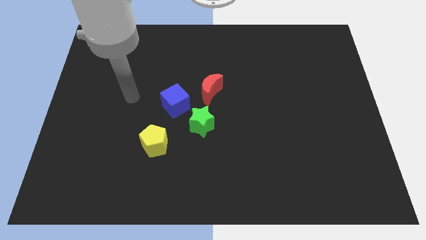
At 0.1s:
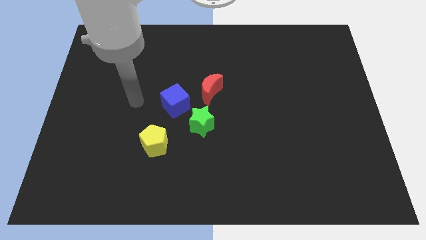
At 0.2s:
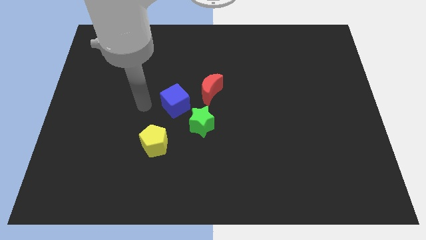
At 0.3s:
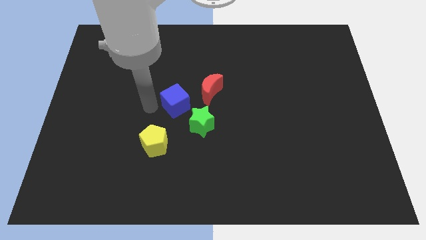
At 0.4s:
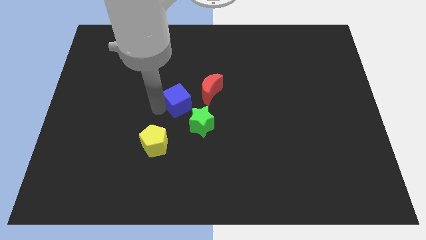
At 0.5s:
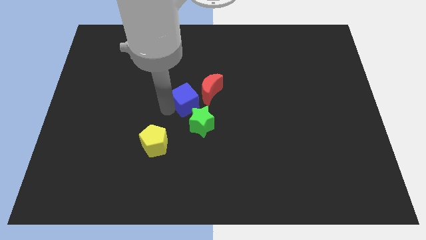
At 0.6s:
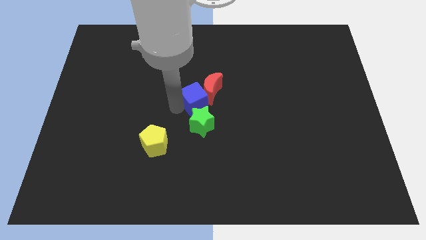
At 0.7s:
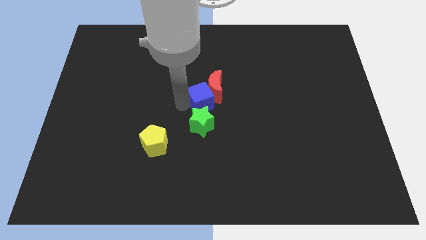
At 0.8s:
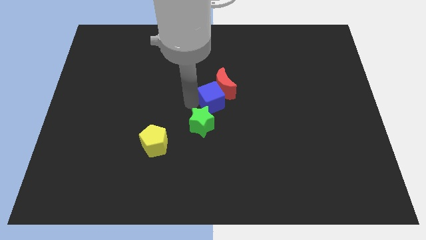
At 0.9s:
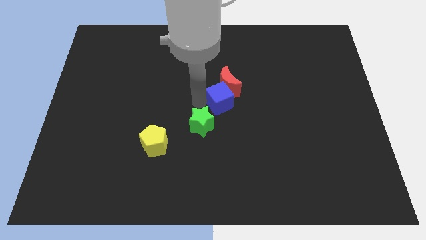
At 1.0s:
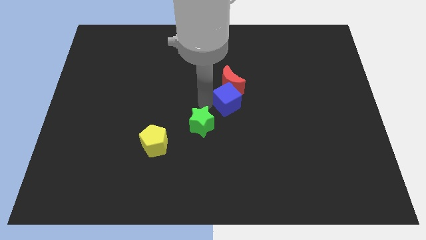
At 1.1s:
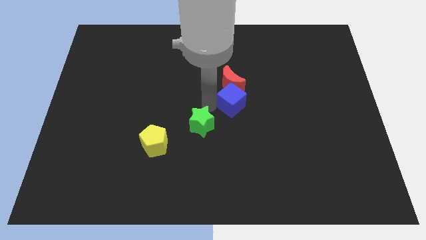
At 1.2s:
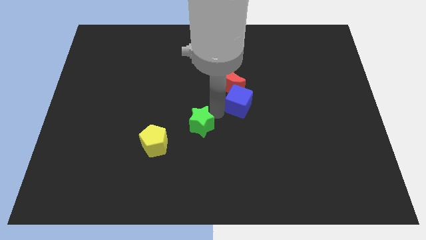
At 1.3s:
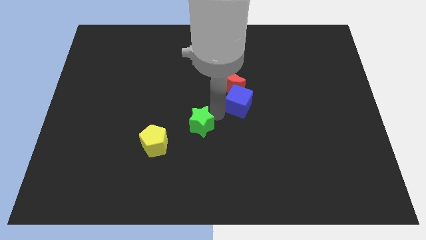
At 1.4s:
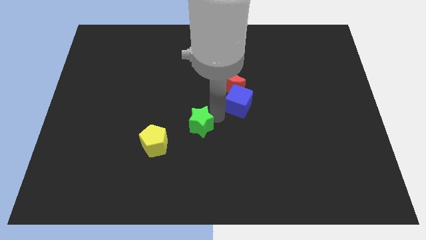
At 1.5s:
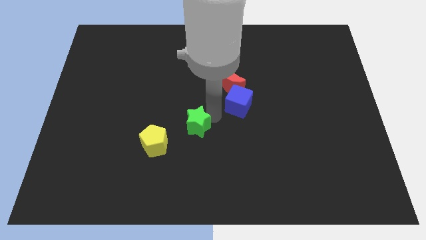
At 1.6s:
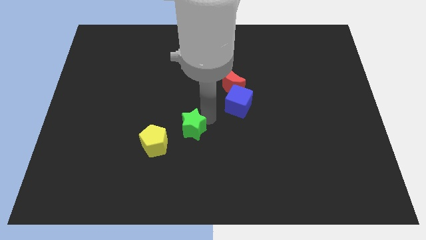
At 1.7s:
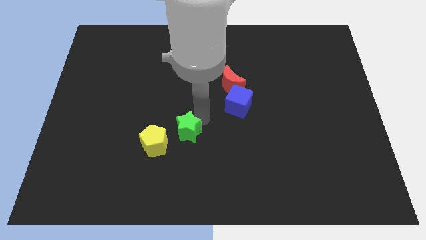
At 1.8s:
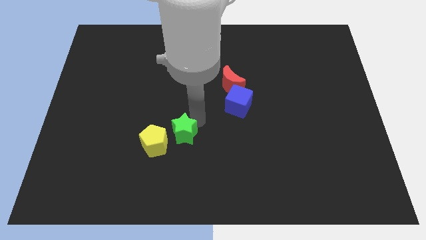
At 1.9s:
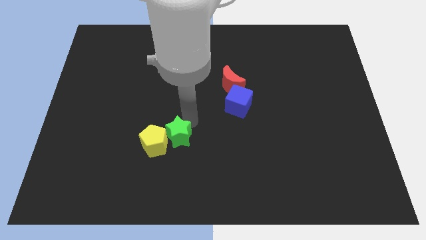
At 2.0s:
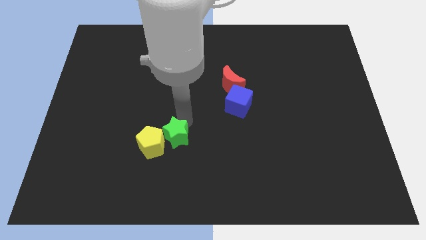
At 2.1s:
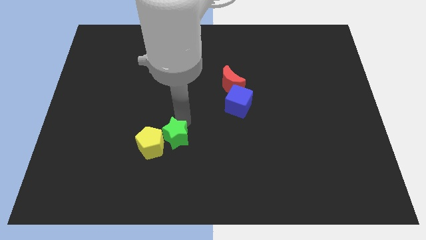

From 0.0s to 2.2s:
push the green star close to the yellow pentagon

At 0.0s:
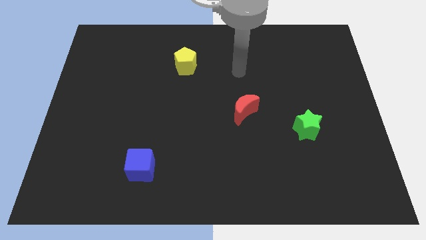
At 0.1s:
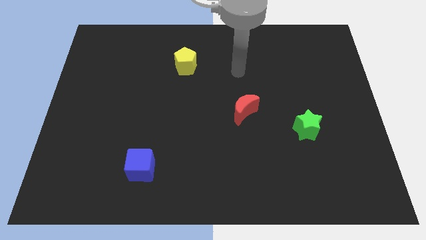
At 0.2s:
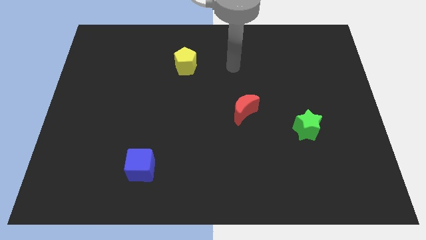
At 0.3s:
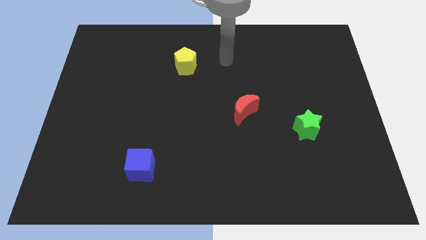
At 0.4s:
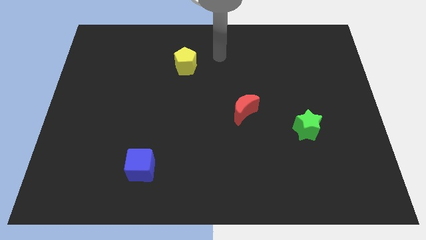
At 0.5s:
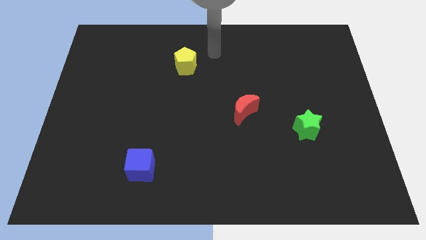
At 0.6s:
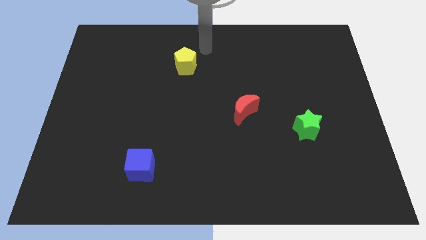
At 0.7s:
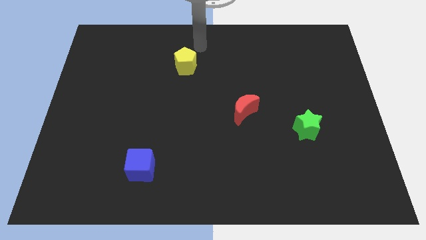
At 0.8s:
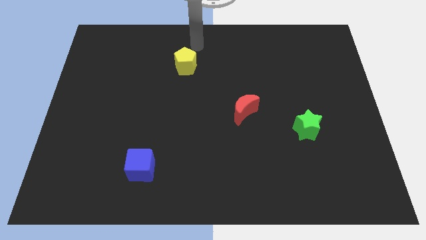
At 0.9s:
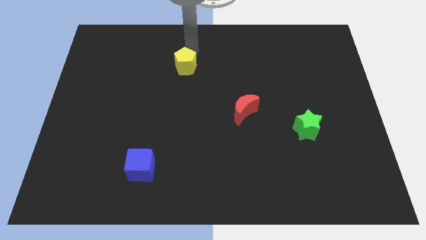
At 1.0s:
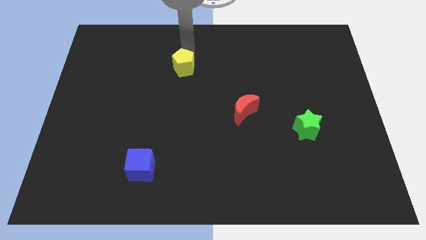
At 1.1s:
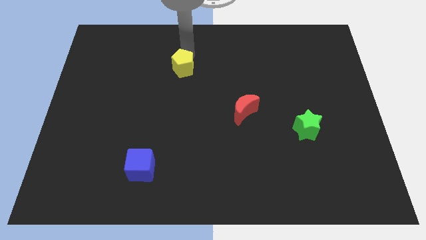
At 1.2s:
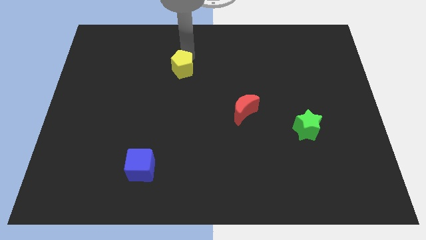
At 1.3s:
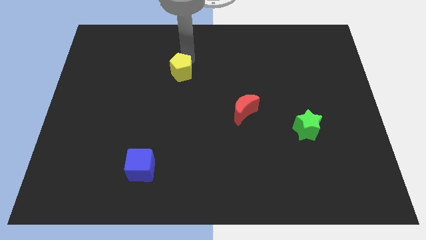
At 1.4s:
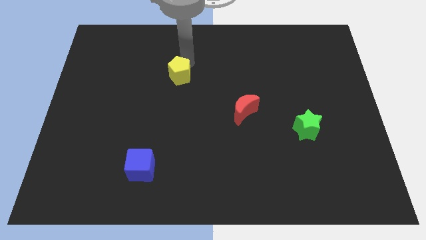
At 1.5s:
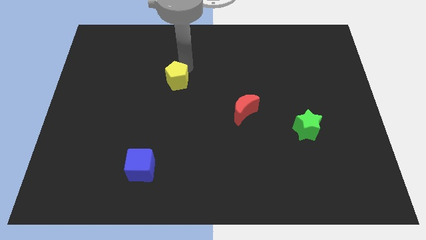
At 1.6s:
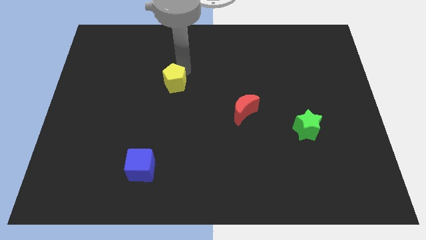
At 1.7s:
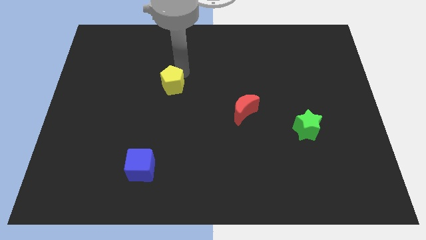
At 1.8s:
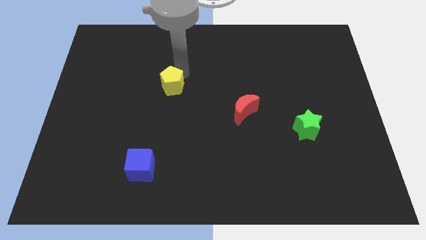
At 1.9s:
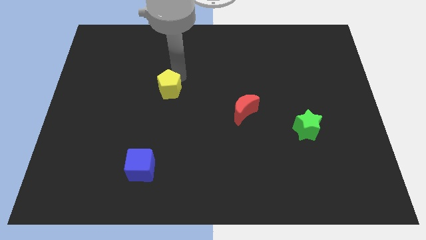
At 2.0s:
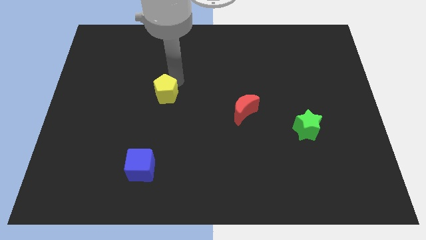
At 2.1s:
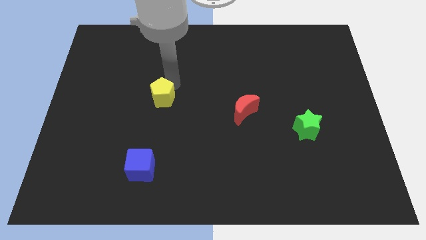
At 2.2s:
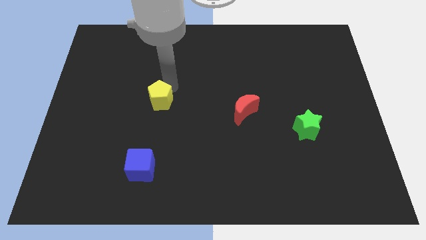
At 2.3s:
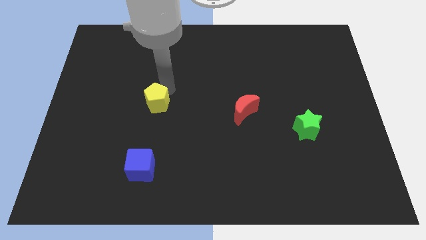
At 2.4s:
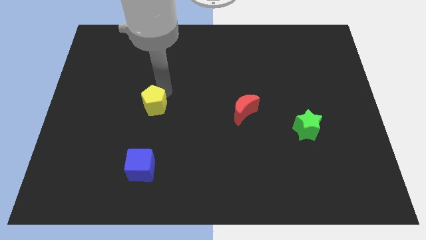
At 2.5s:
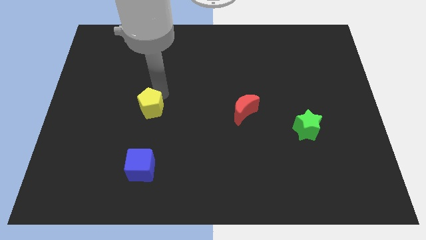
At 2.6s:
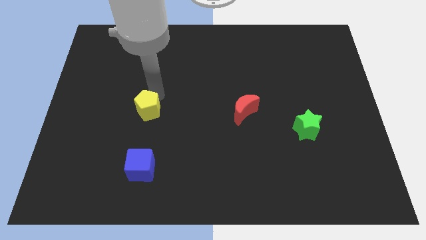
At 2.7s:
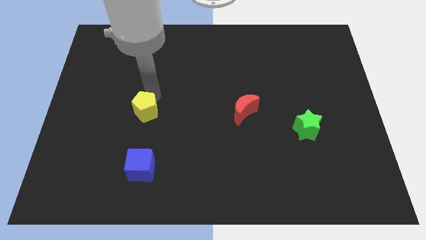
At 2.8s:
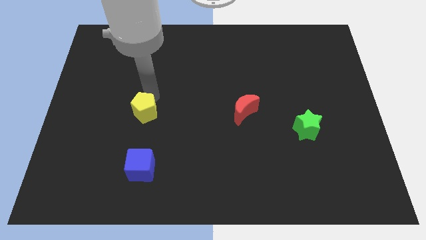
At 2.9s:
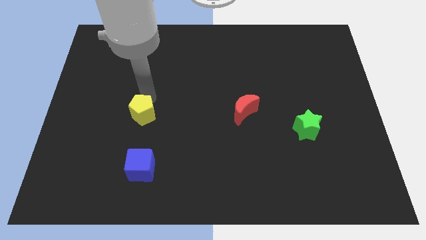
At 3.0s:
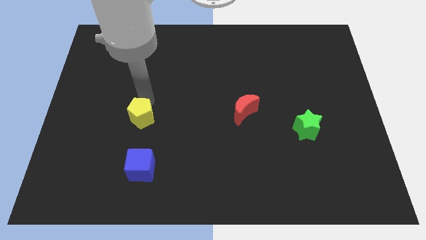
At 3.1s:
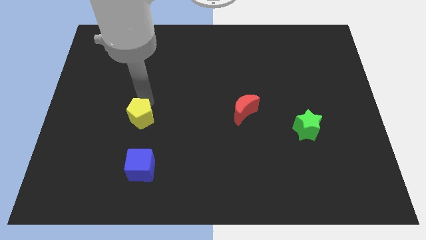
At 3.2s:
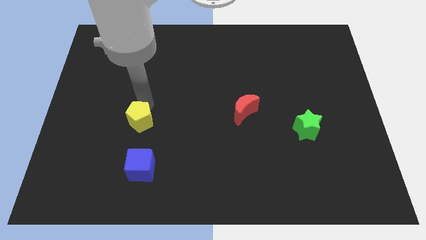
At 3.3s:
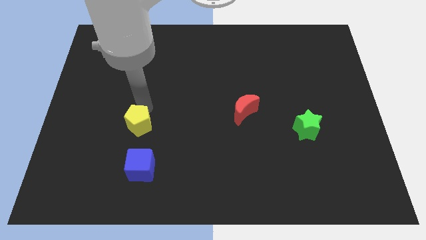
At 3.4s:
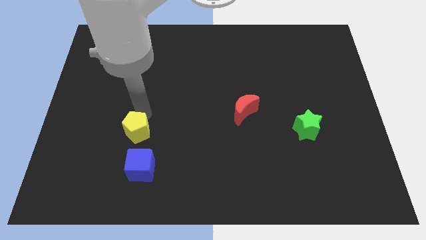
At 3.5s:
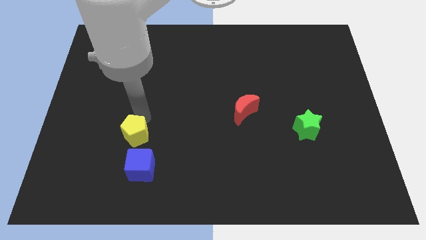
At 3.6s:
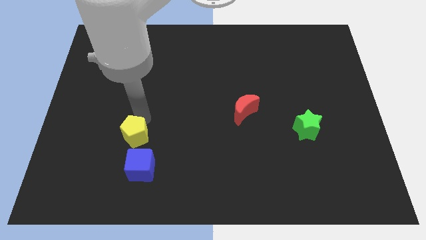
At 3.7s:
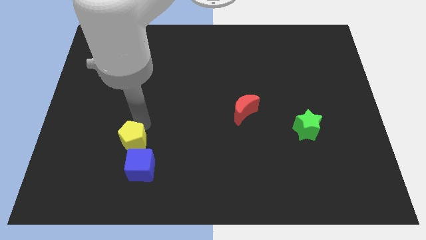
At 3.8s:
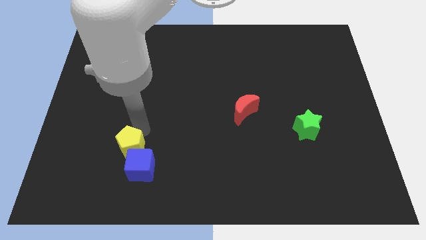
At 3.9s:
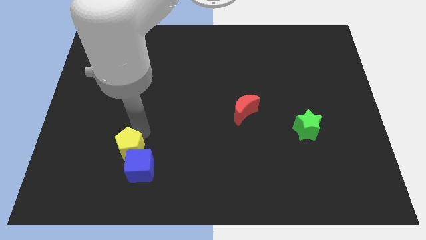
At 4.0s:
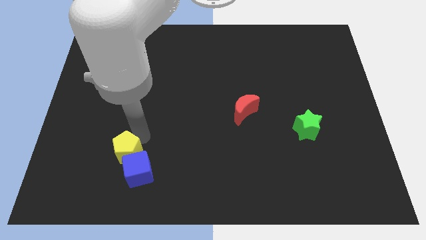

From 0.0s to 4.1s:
push the yellow pentagon towards the blue block

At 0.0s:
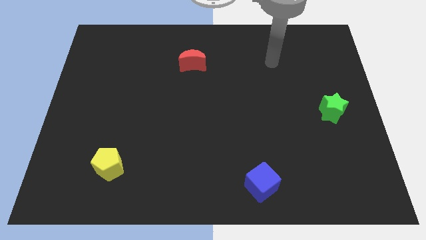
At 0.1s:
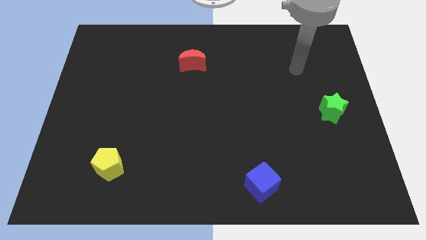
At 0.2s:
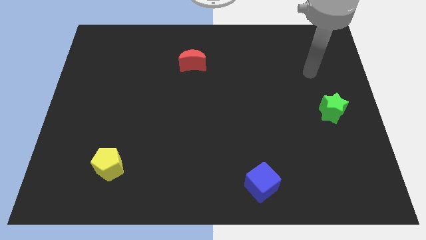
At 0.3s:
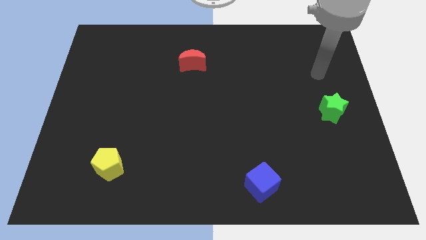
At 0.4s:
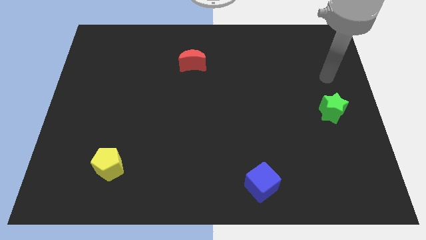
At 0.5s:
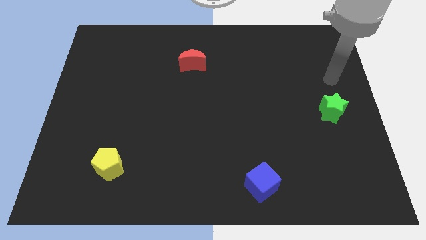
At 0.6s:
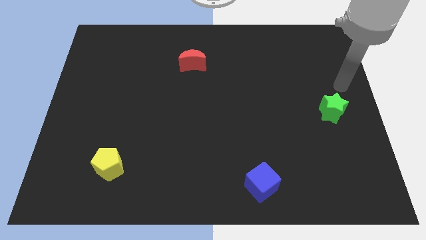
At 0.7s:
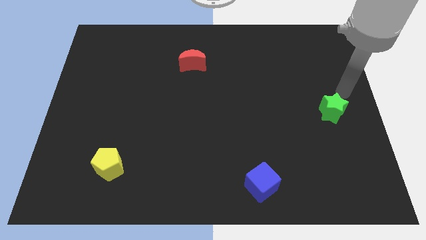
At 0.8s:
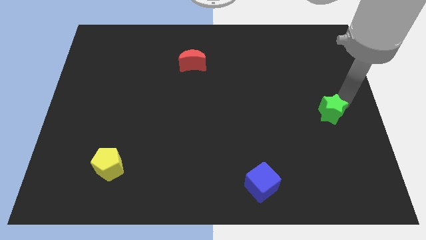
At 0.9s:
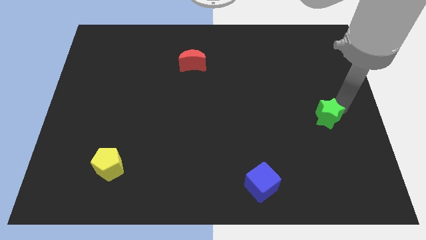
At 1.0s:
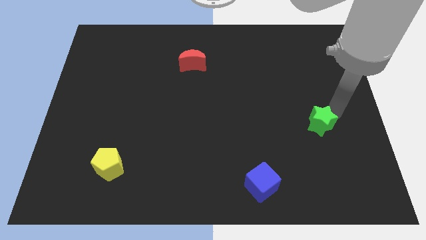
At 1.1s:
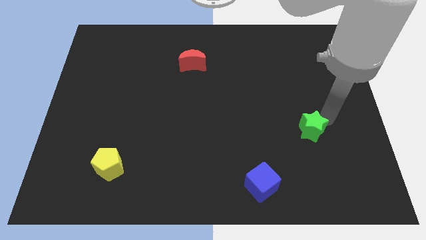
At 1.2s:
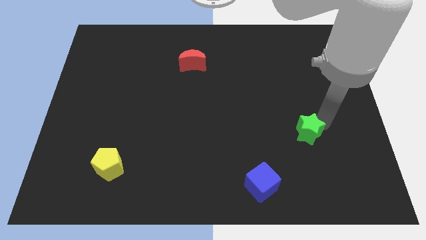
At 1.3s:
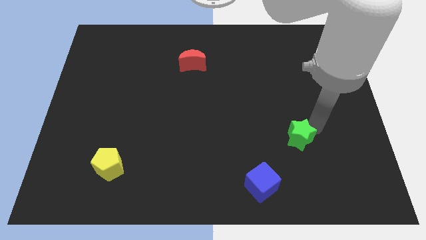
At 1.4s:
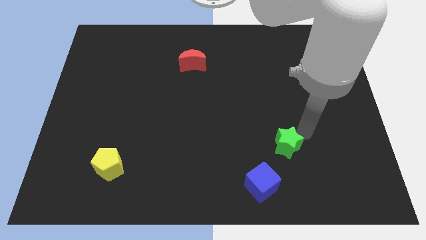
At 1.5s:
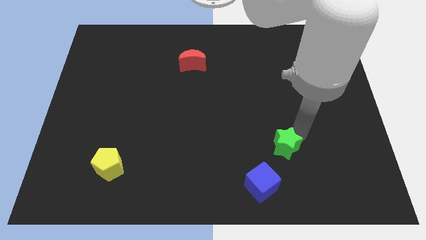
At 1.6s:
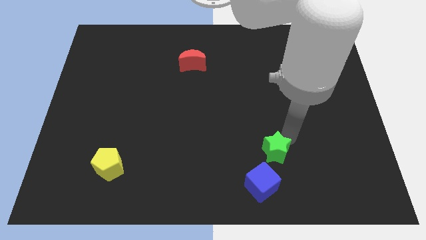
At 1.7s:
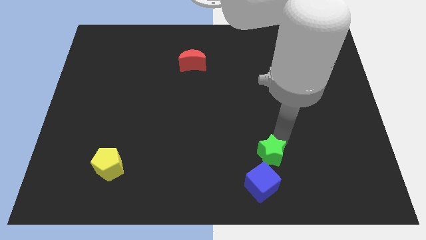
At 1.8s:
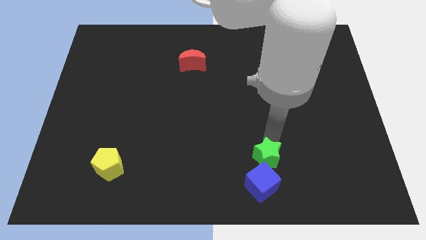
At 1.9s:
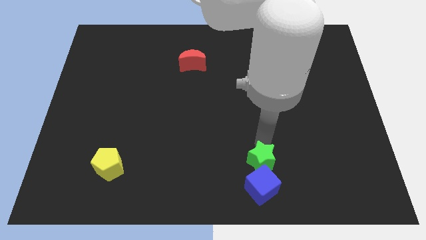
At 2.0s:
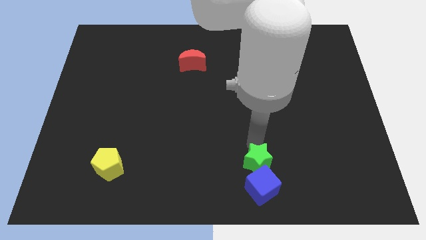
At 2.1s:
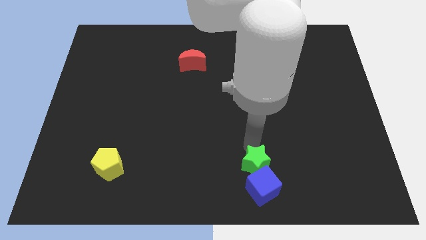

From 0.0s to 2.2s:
push the green star to the cube
